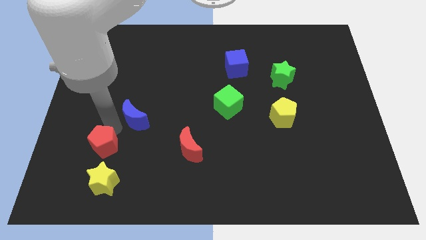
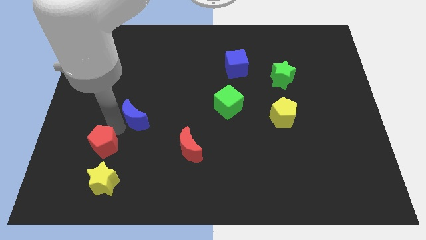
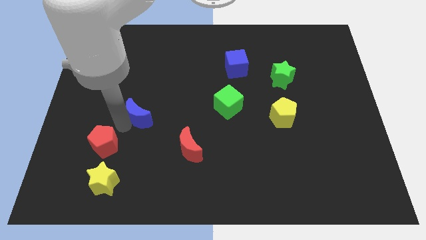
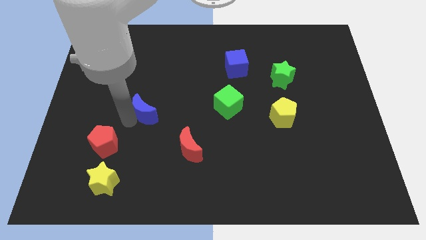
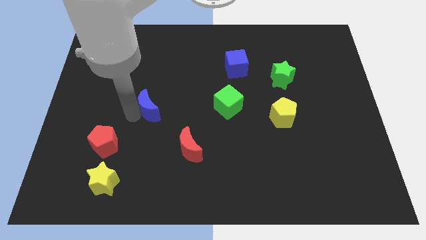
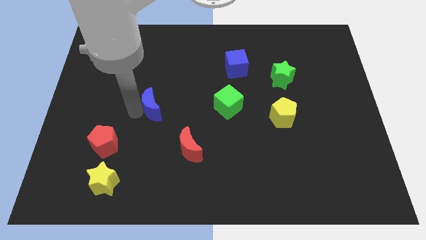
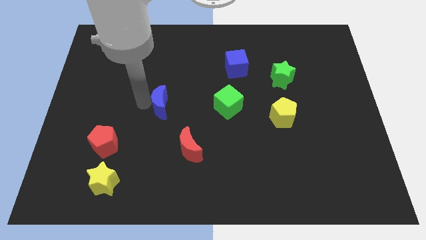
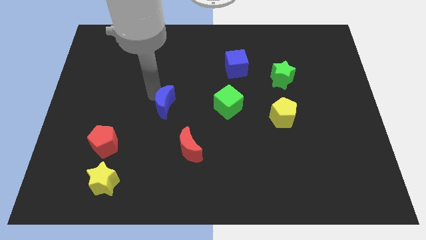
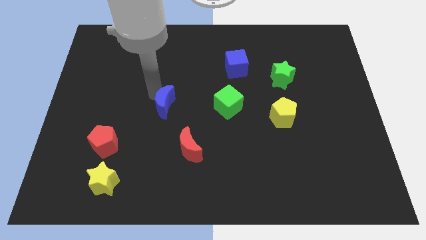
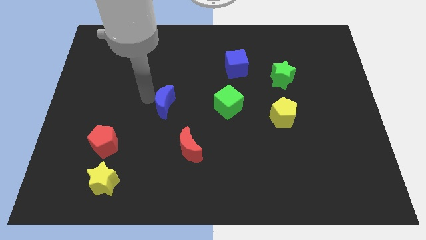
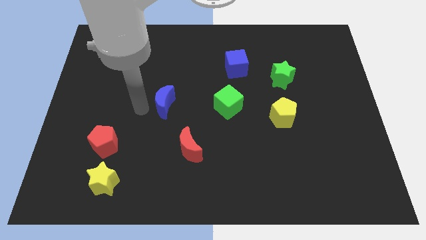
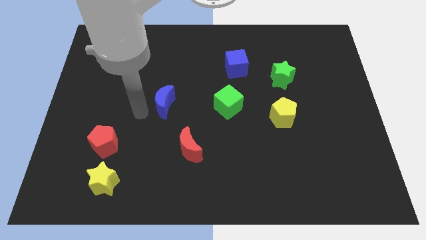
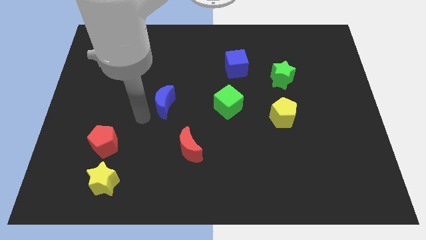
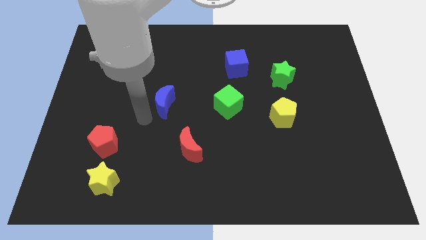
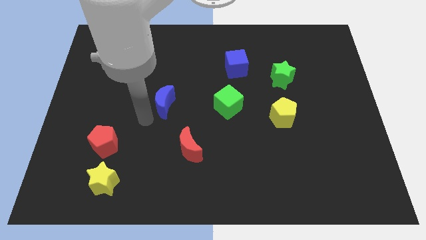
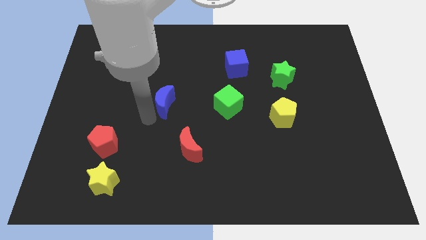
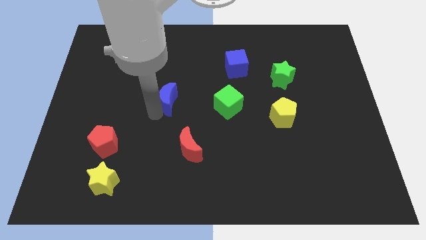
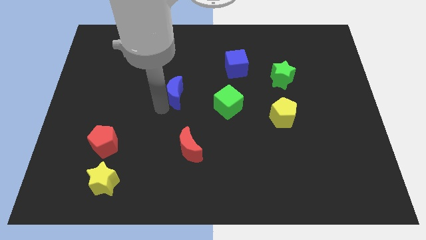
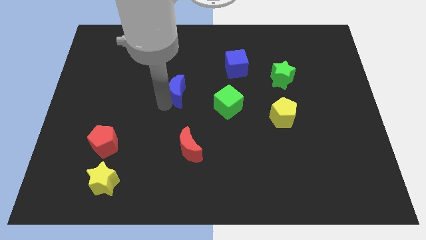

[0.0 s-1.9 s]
move the blue crescent towards the center of the board

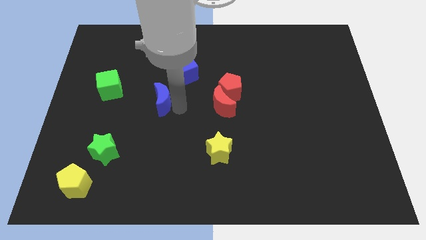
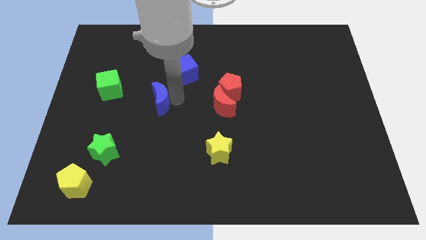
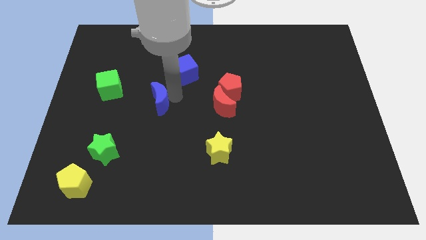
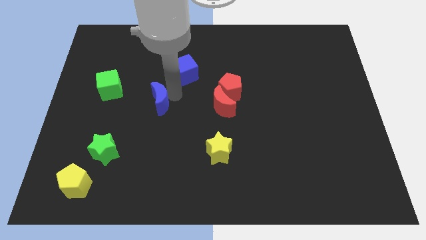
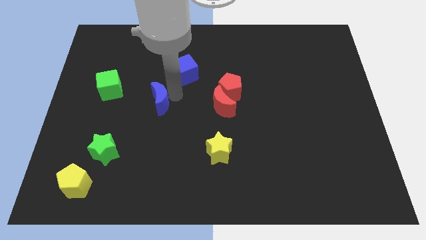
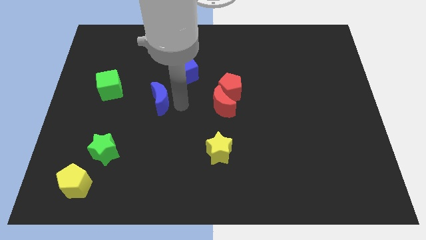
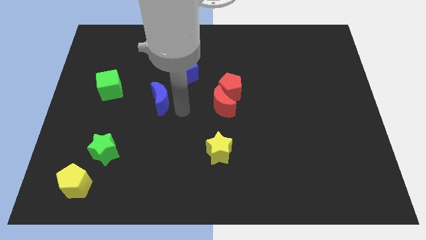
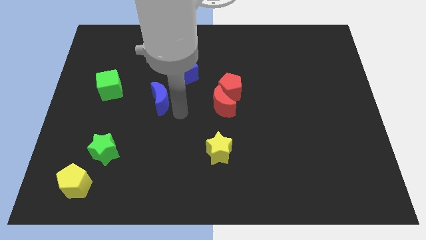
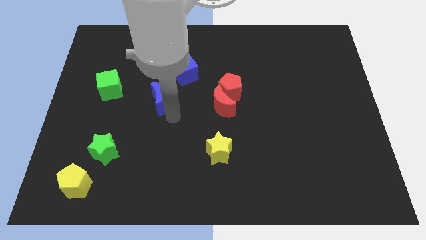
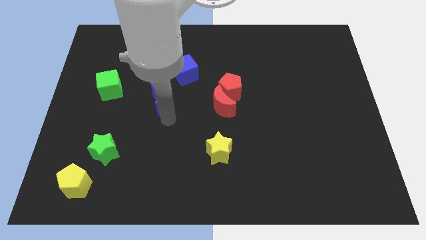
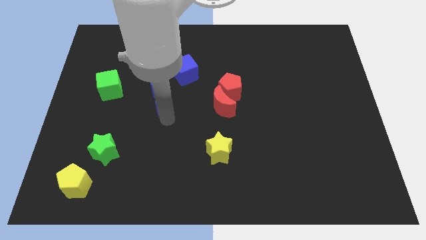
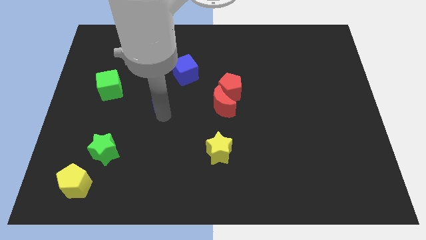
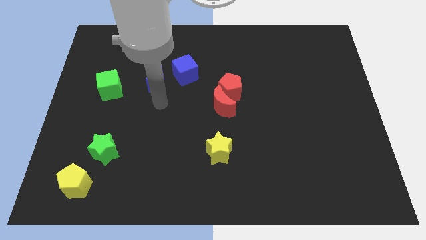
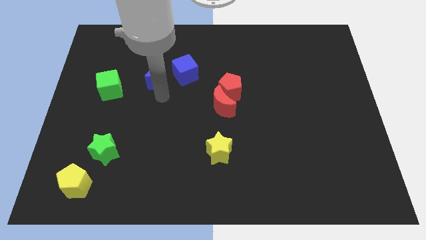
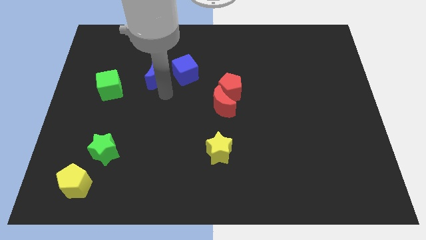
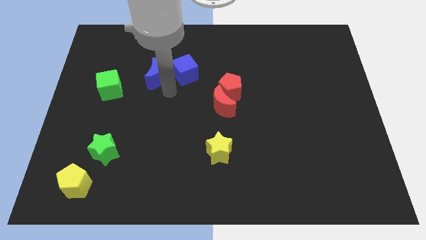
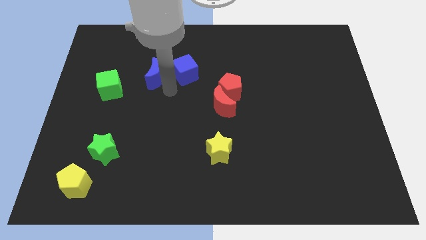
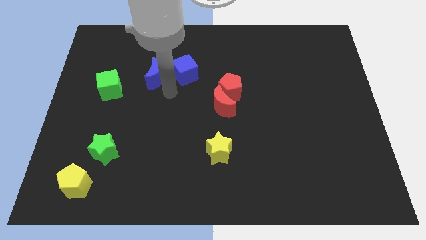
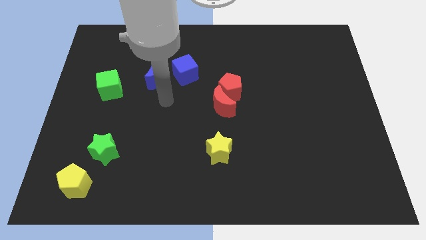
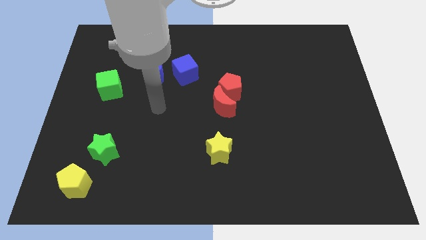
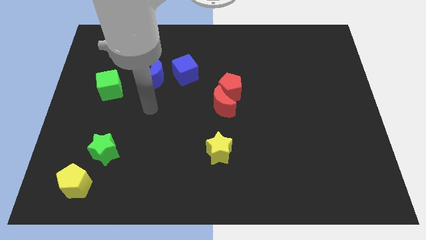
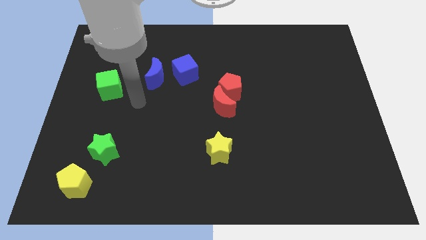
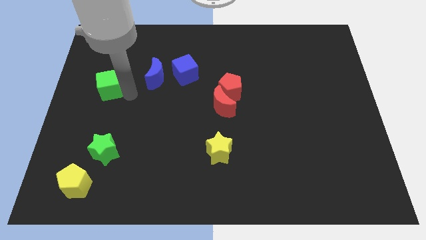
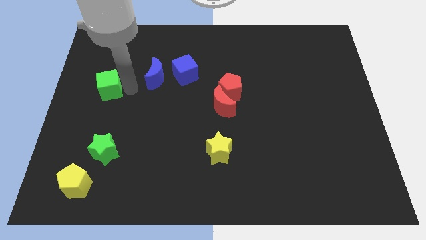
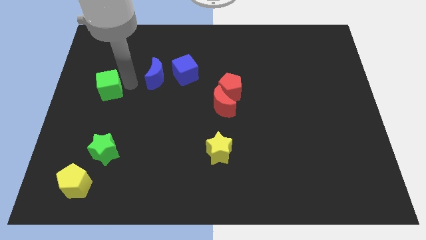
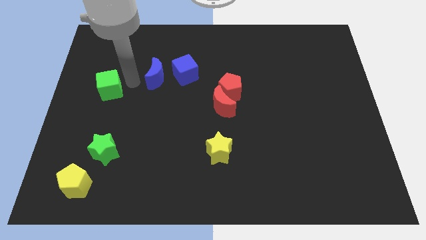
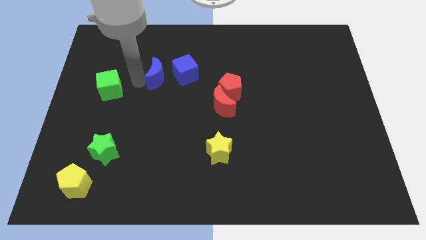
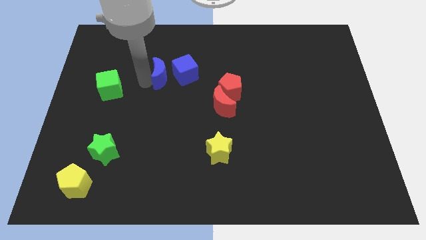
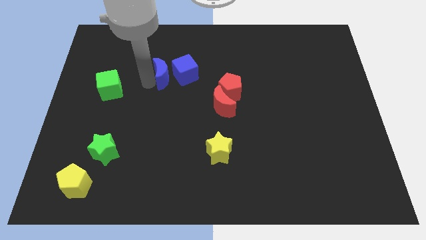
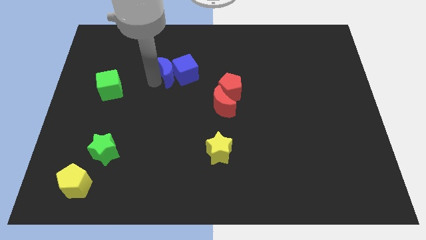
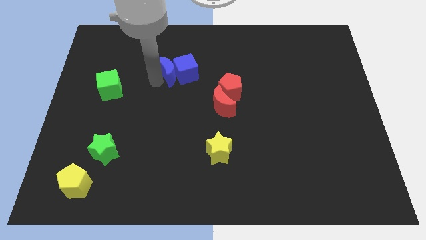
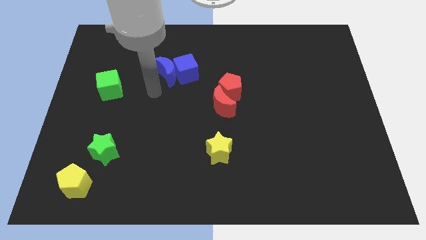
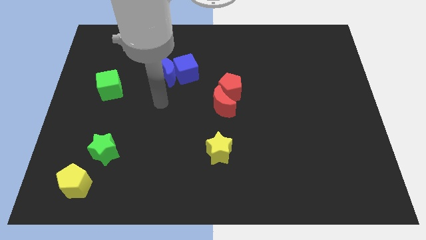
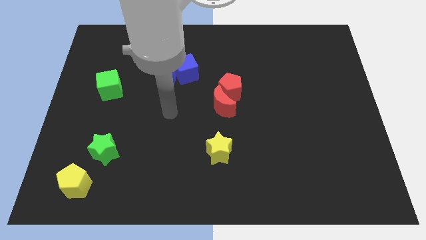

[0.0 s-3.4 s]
push the blue crescent into the blue cube

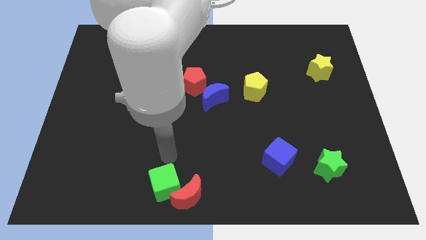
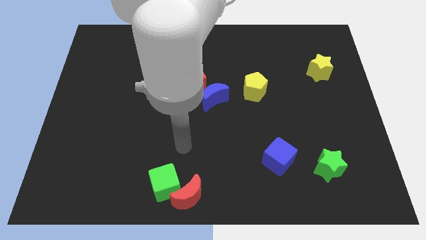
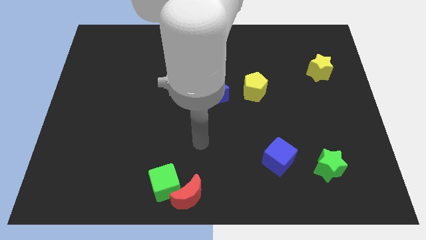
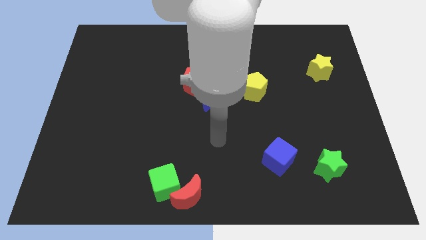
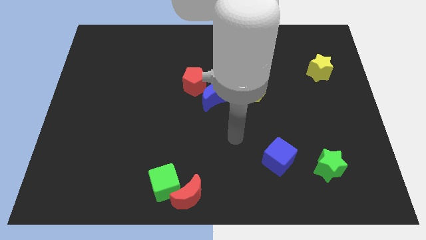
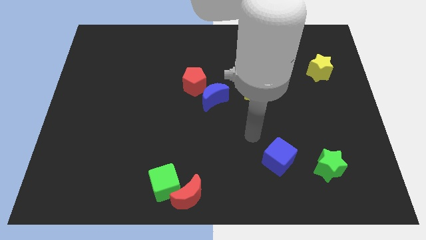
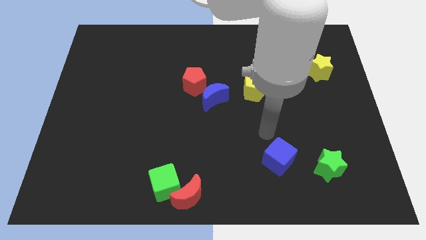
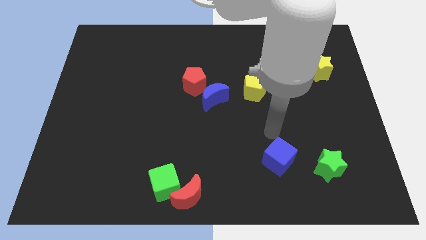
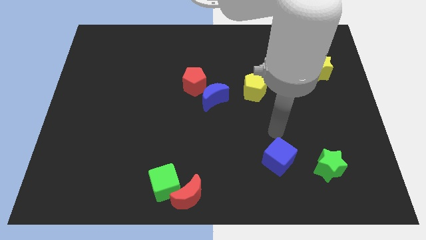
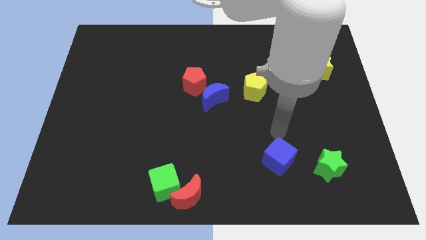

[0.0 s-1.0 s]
move your arm above the blue cube

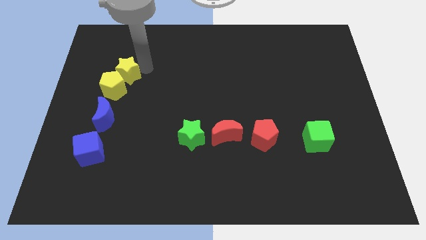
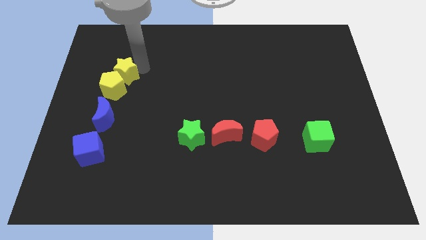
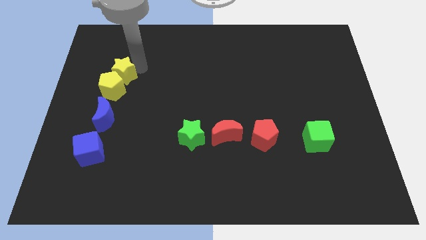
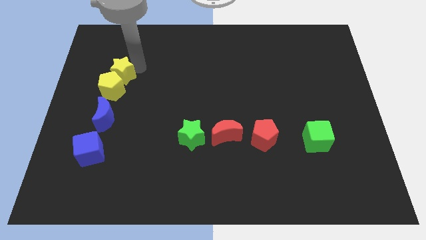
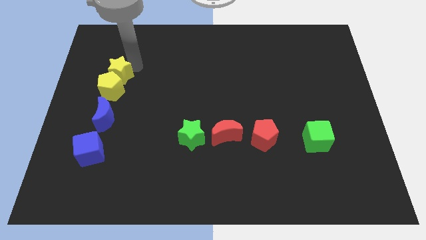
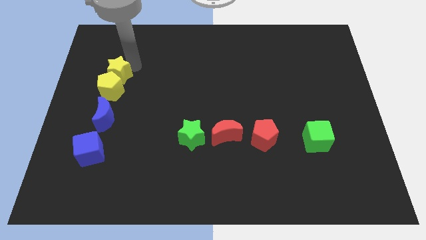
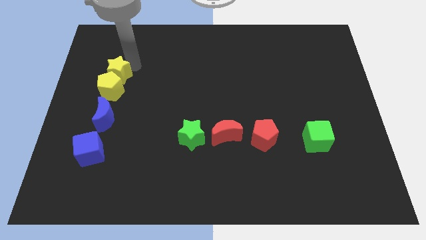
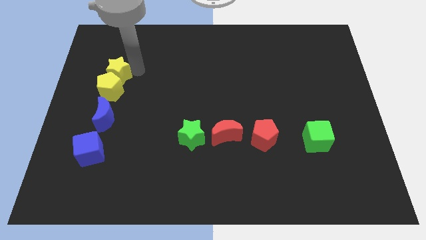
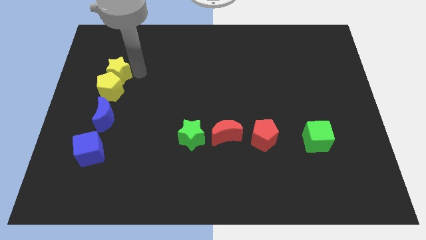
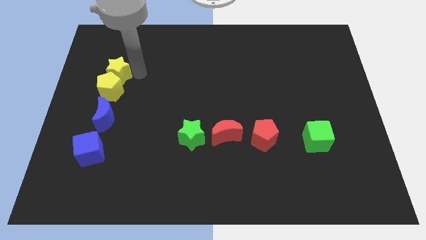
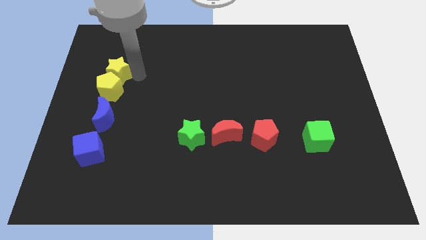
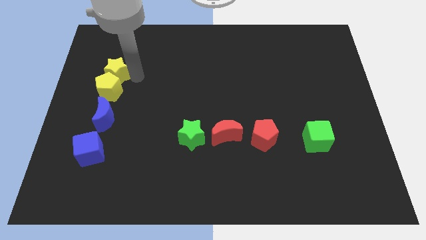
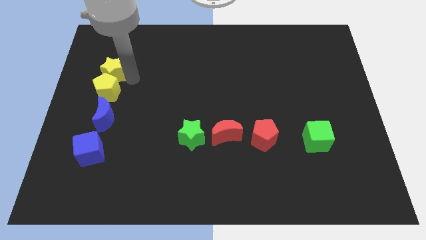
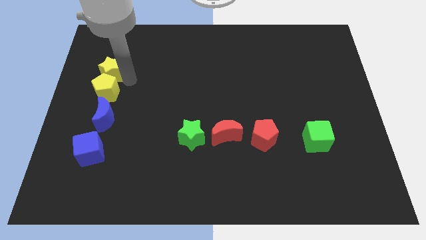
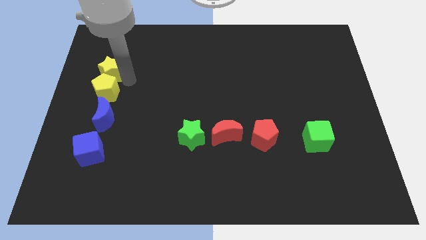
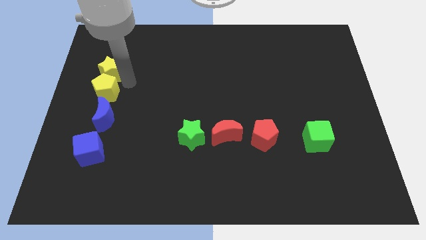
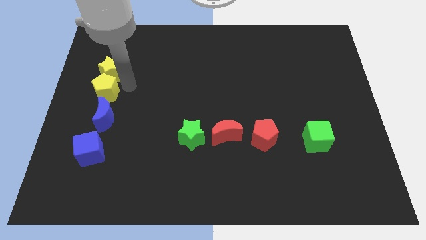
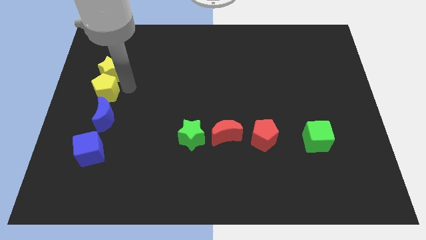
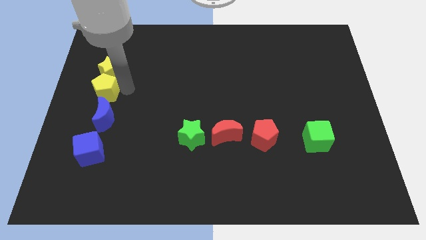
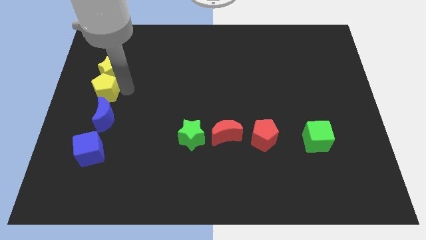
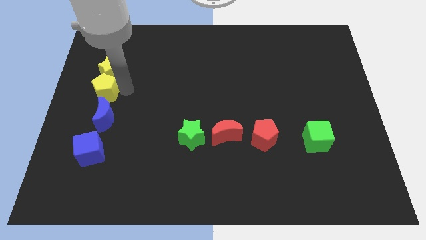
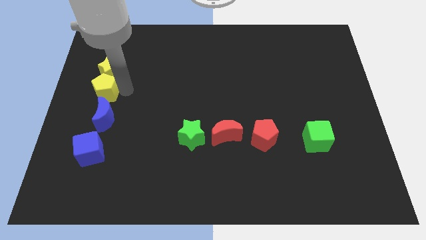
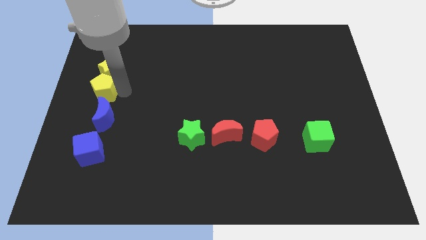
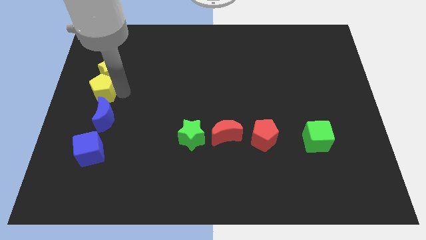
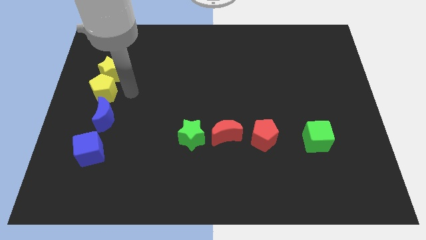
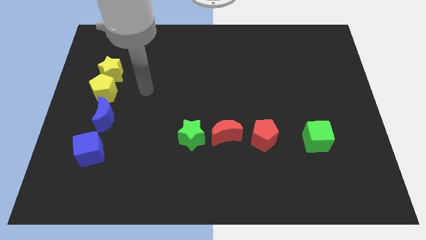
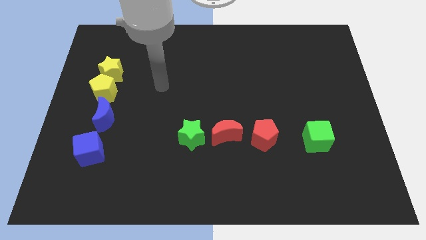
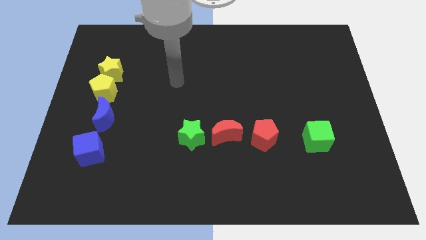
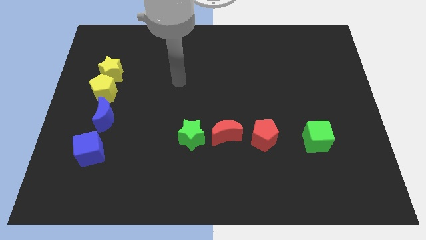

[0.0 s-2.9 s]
push the yellow blocks towards the top left side of the board
